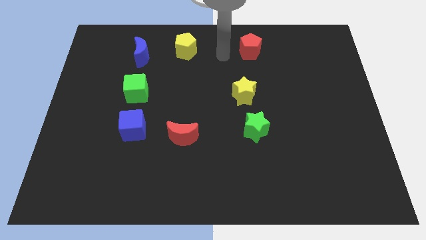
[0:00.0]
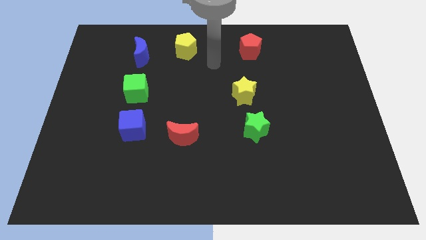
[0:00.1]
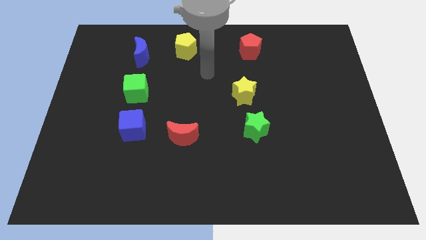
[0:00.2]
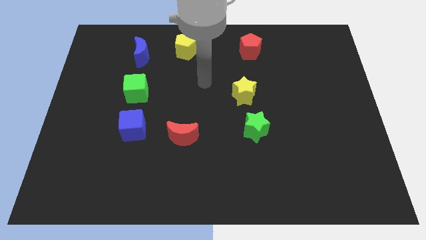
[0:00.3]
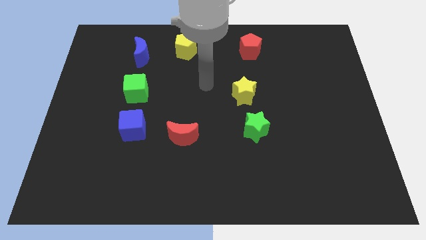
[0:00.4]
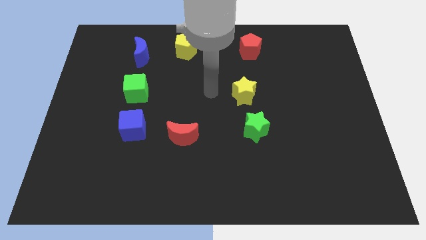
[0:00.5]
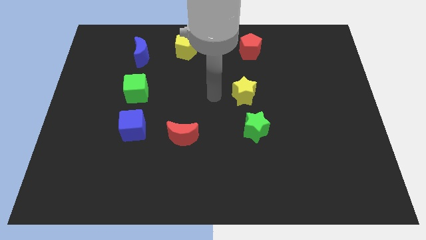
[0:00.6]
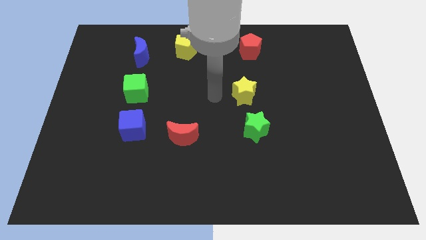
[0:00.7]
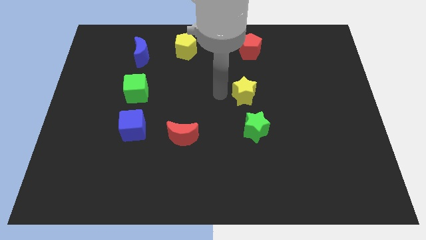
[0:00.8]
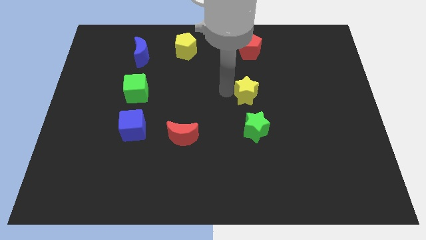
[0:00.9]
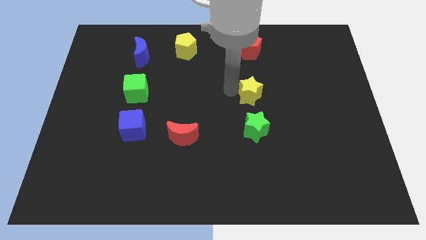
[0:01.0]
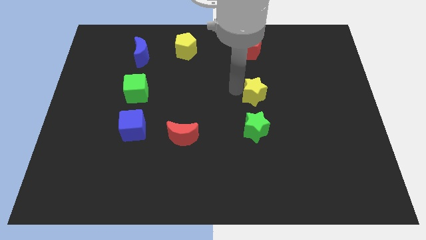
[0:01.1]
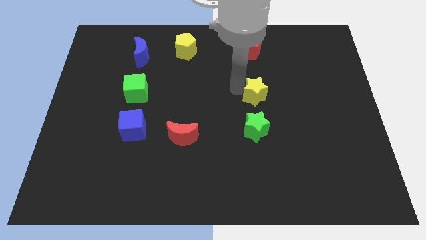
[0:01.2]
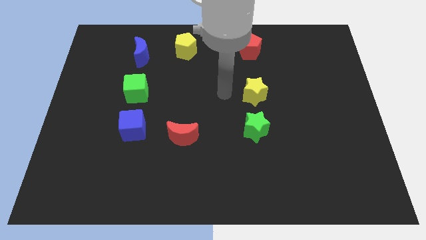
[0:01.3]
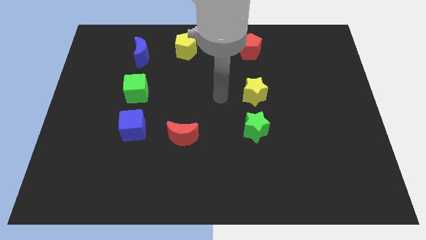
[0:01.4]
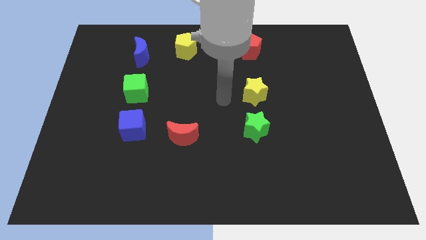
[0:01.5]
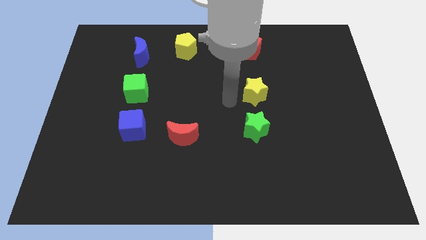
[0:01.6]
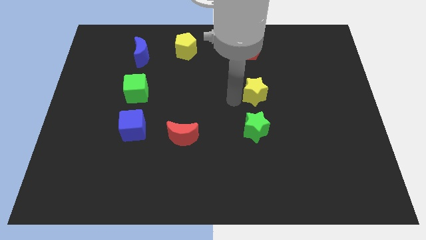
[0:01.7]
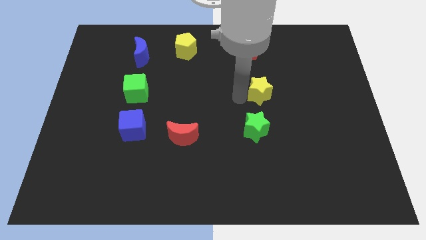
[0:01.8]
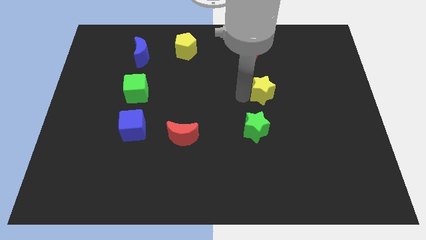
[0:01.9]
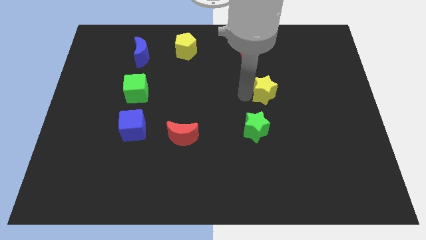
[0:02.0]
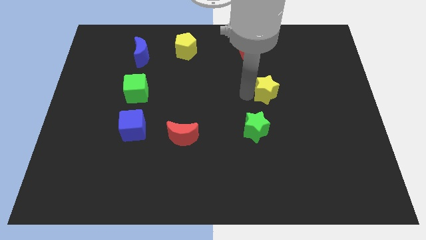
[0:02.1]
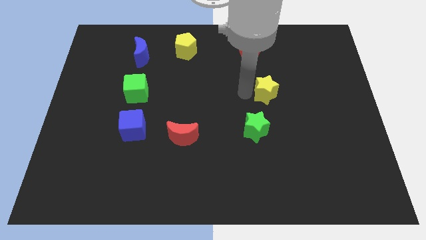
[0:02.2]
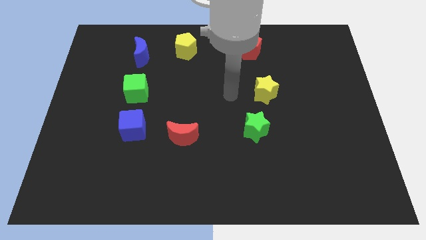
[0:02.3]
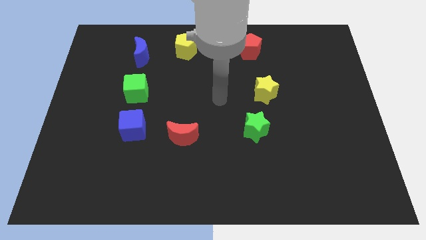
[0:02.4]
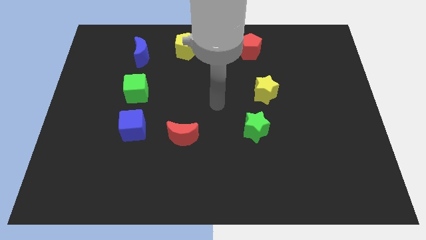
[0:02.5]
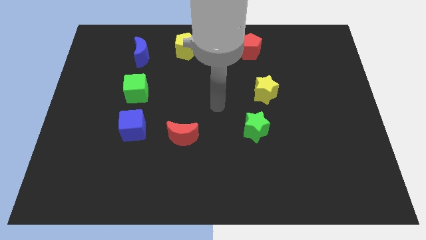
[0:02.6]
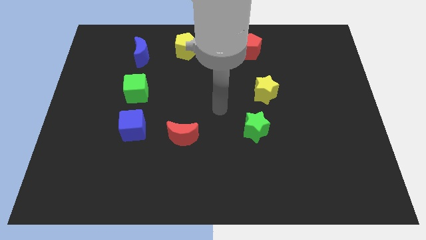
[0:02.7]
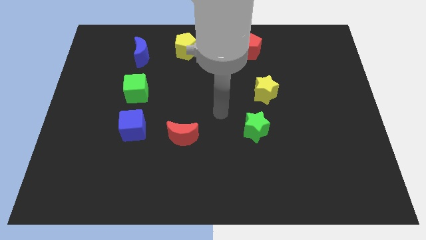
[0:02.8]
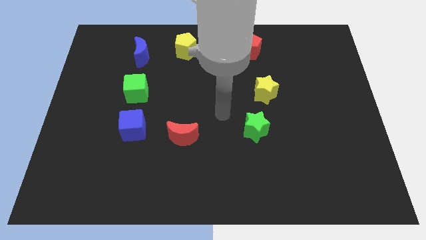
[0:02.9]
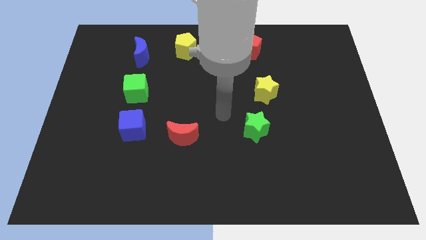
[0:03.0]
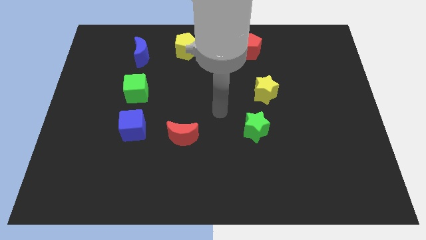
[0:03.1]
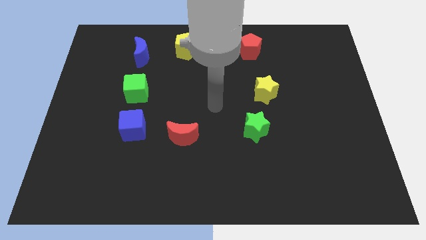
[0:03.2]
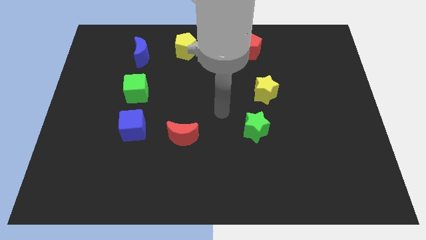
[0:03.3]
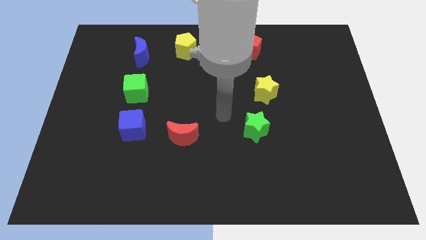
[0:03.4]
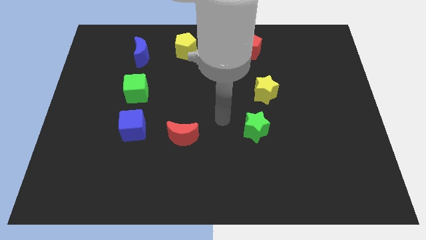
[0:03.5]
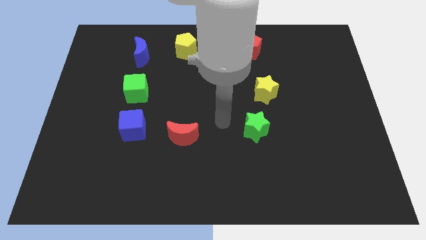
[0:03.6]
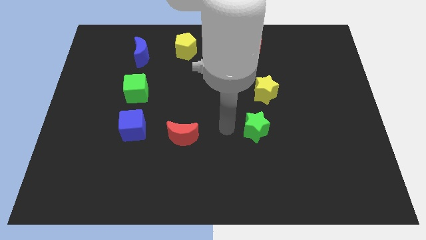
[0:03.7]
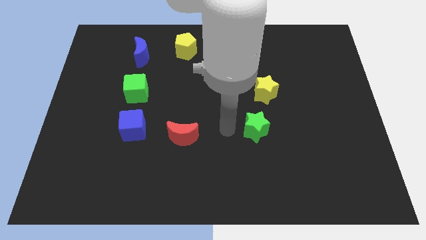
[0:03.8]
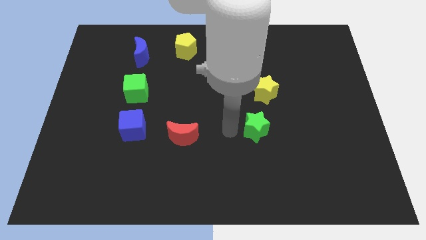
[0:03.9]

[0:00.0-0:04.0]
push the yellow star diagonally to the right top of the green star

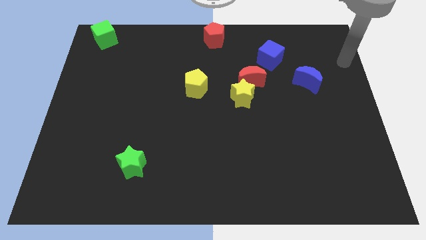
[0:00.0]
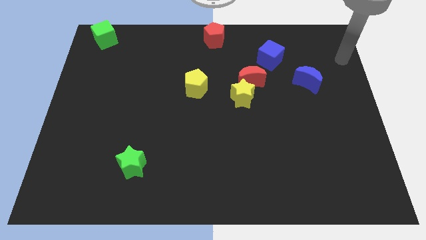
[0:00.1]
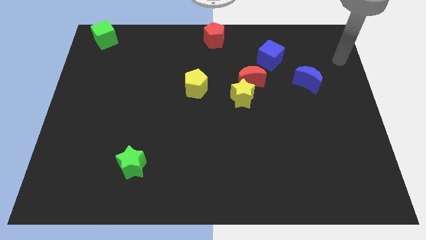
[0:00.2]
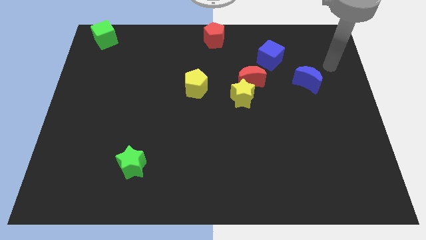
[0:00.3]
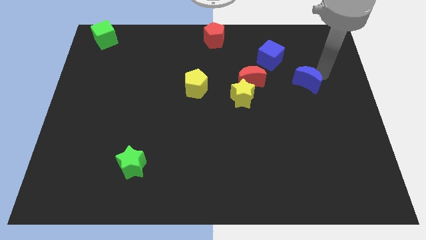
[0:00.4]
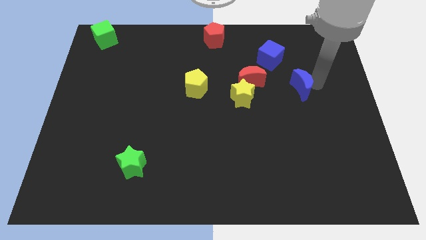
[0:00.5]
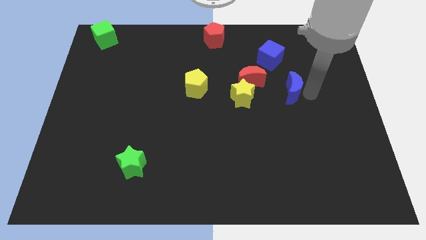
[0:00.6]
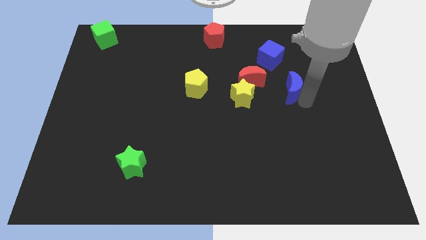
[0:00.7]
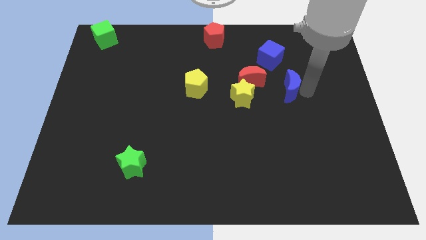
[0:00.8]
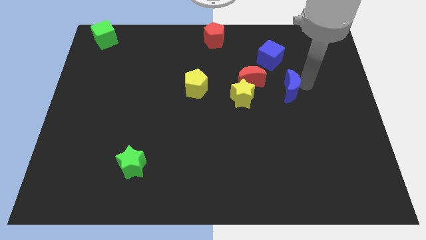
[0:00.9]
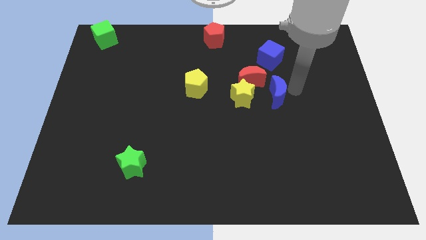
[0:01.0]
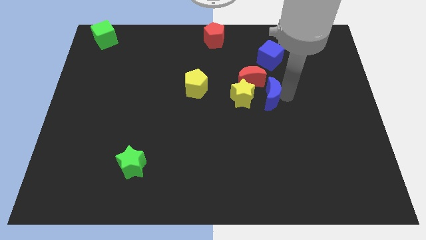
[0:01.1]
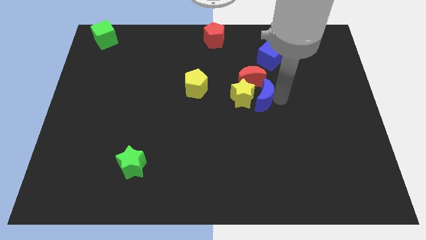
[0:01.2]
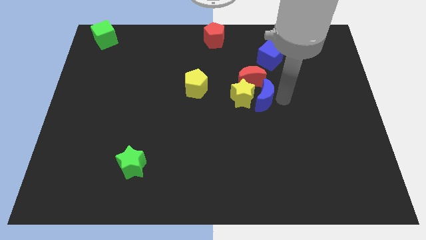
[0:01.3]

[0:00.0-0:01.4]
slide the blue crescent towards the right side of the yellow star

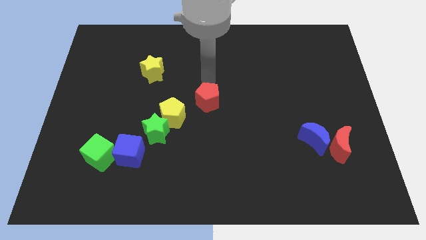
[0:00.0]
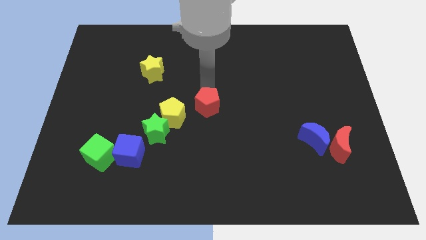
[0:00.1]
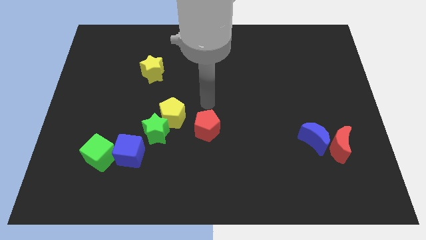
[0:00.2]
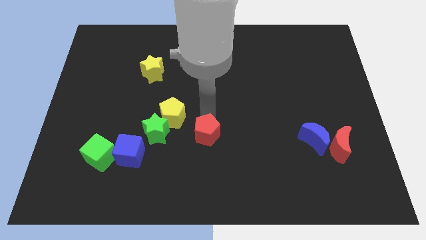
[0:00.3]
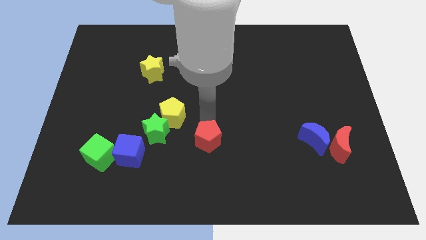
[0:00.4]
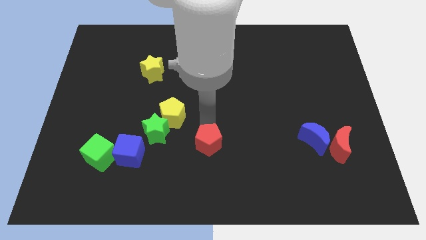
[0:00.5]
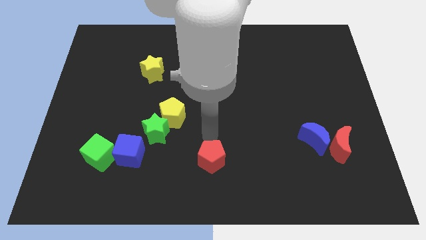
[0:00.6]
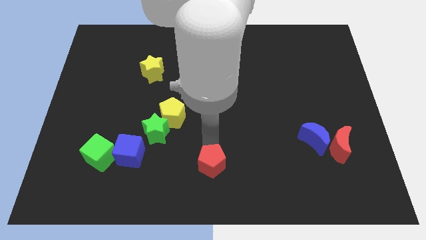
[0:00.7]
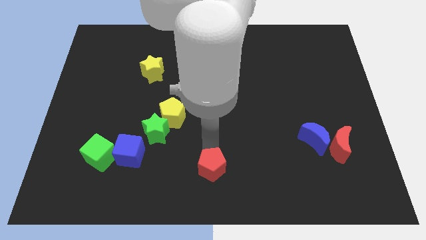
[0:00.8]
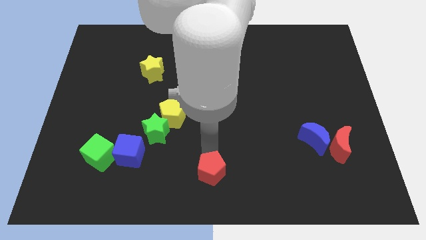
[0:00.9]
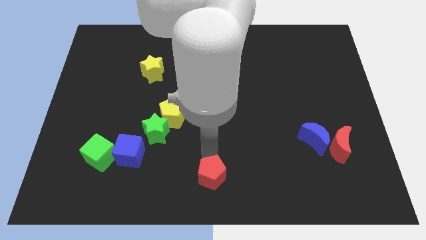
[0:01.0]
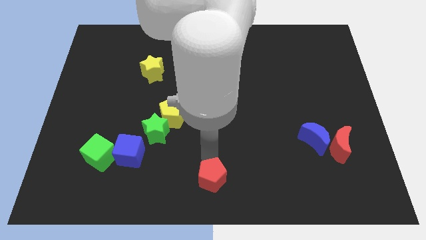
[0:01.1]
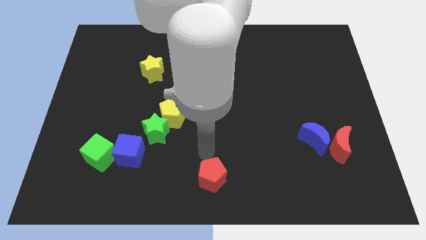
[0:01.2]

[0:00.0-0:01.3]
move the red pentagon downwards to the bottom center of the of the board

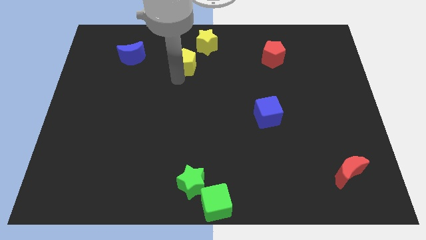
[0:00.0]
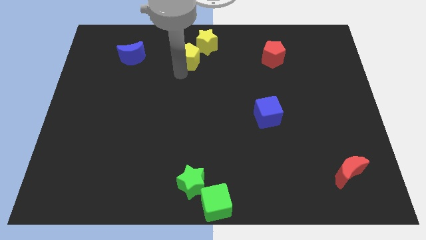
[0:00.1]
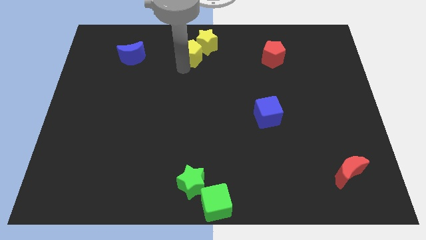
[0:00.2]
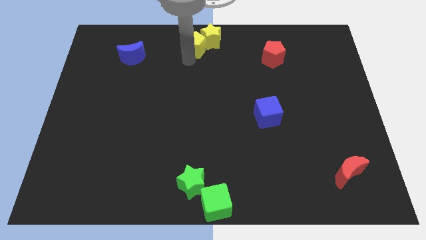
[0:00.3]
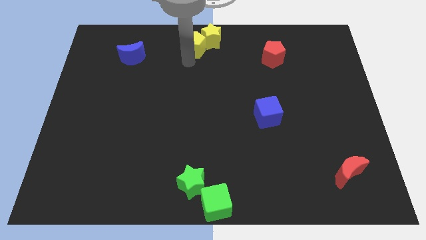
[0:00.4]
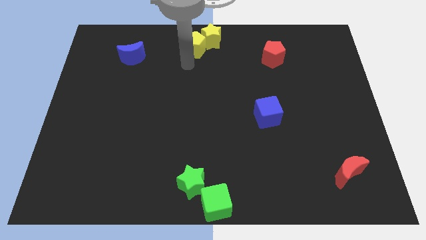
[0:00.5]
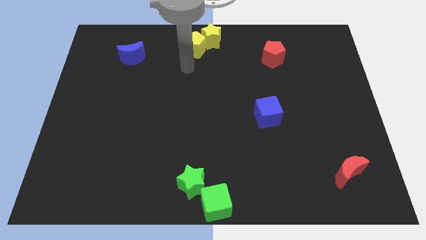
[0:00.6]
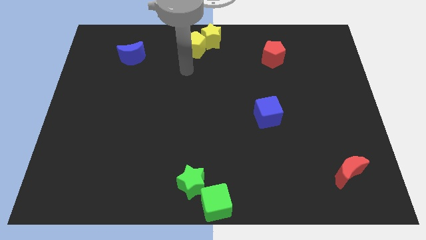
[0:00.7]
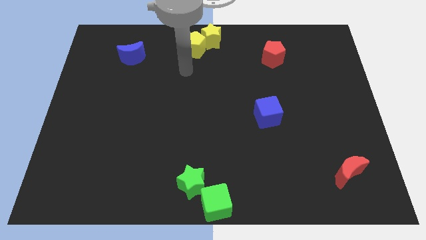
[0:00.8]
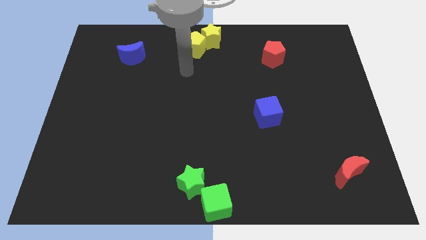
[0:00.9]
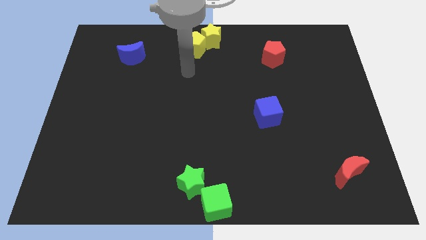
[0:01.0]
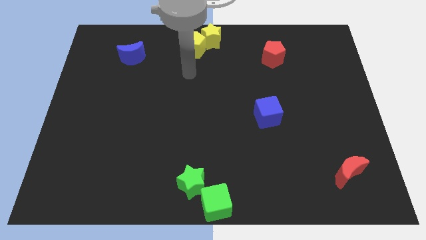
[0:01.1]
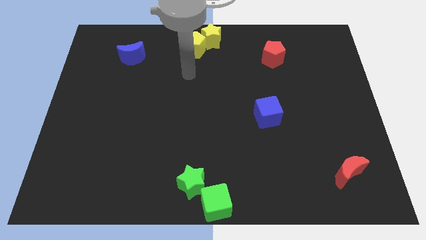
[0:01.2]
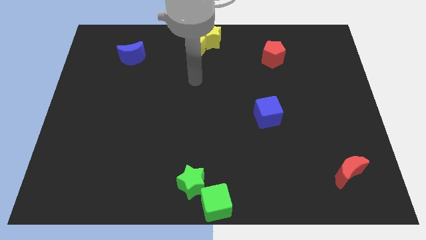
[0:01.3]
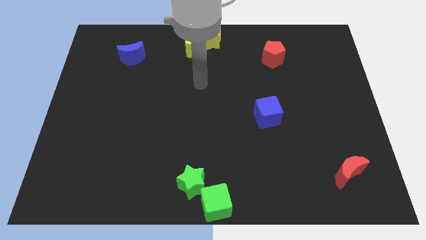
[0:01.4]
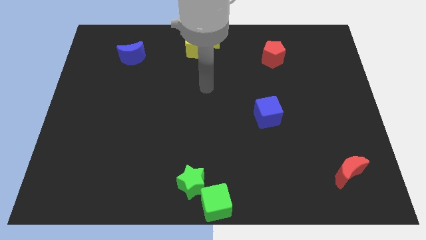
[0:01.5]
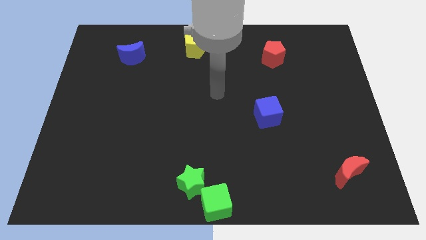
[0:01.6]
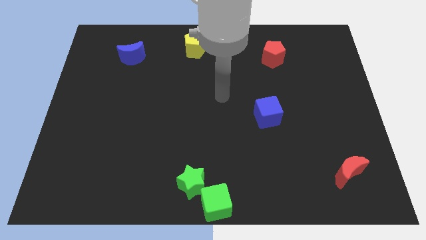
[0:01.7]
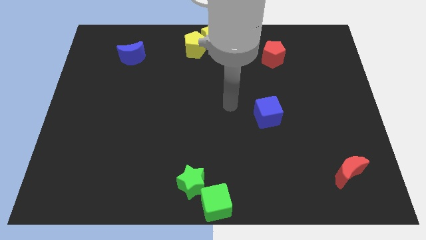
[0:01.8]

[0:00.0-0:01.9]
put the yellow pentagon into the yellow star

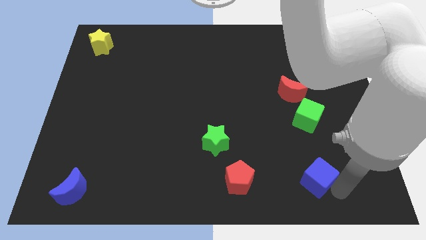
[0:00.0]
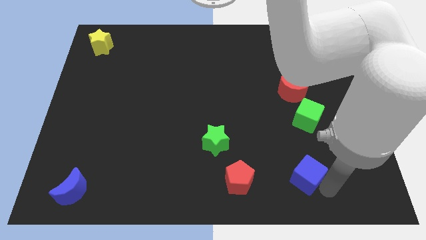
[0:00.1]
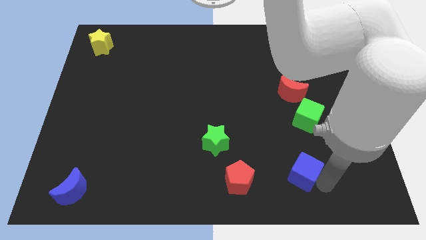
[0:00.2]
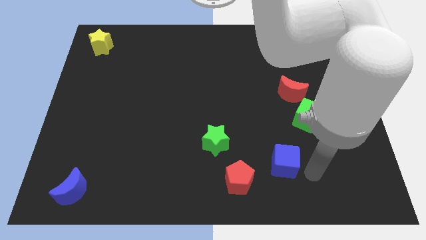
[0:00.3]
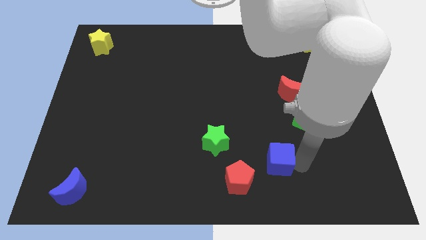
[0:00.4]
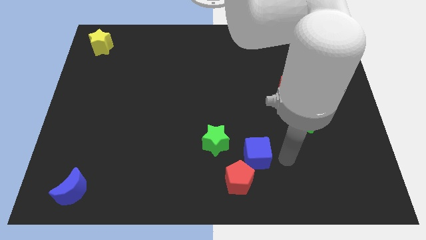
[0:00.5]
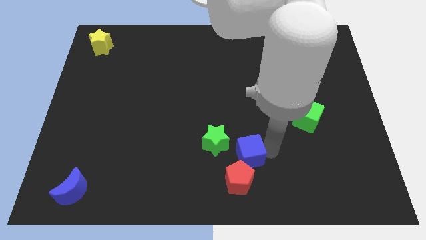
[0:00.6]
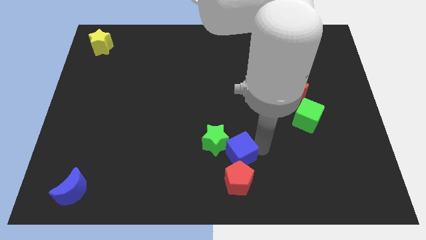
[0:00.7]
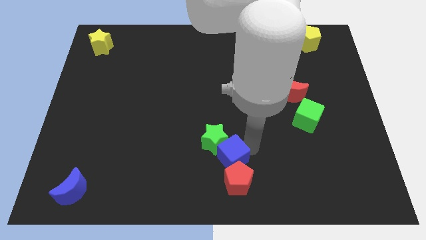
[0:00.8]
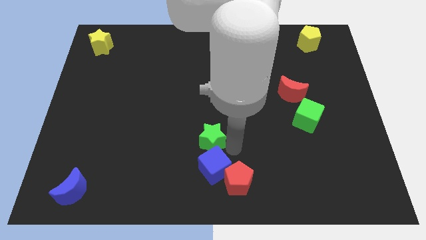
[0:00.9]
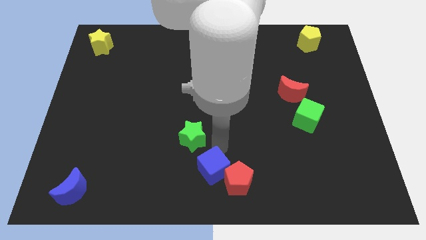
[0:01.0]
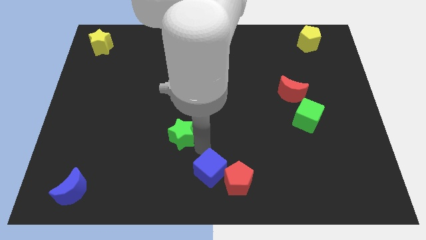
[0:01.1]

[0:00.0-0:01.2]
move the blue cube to the bottom center of the board
